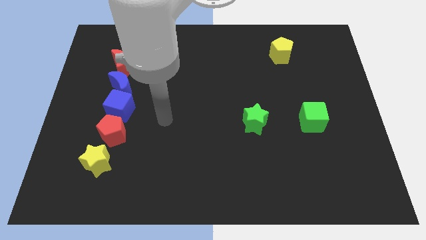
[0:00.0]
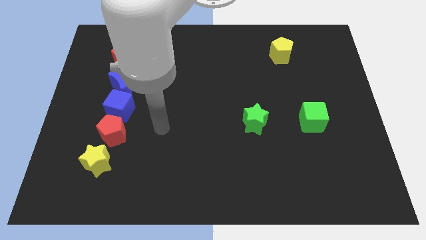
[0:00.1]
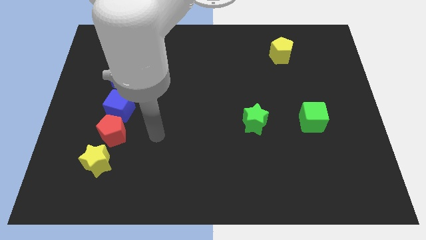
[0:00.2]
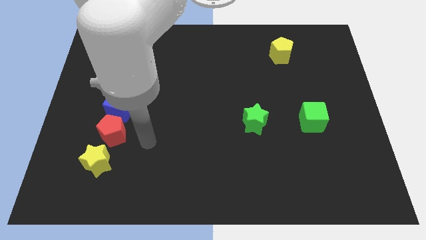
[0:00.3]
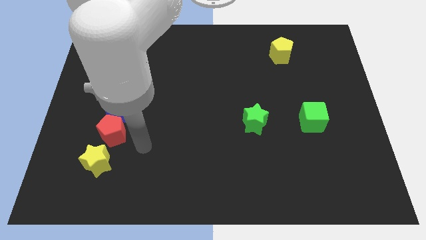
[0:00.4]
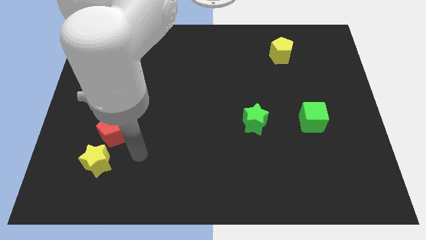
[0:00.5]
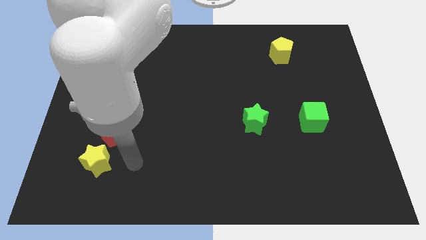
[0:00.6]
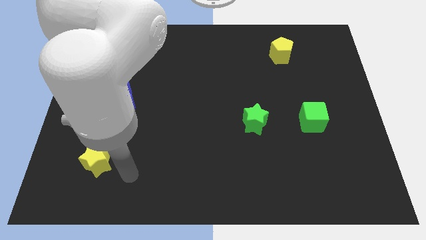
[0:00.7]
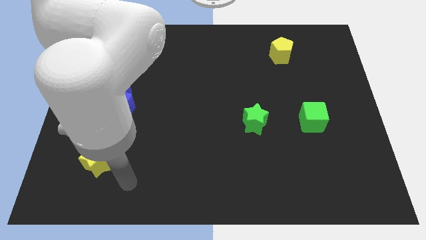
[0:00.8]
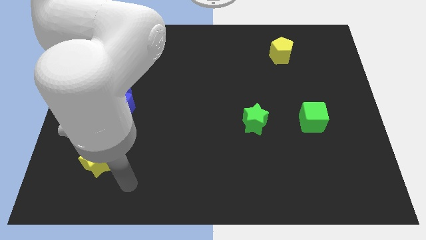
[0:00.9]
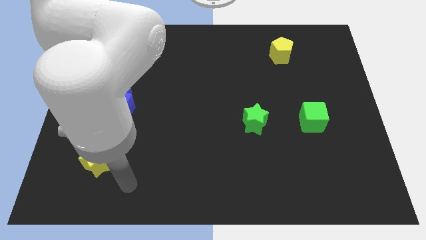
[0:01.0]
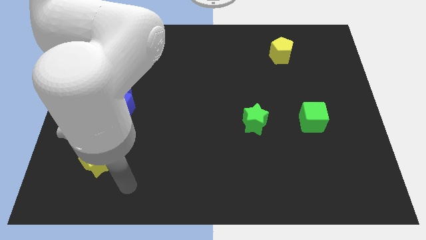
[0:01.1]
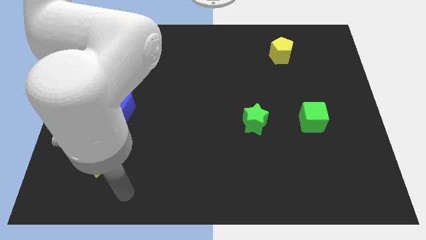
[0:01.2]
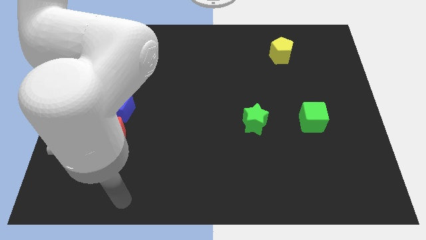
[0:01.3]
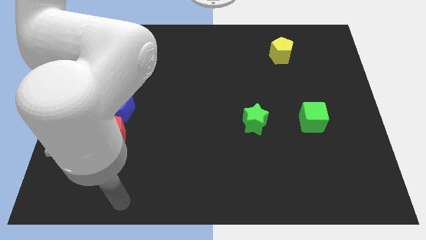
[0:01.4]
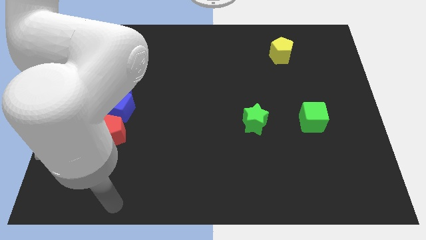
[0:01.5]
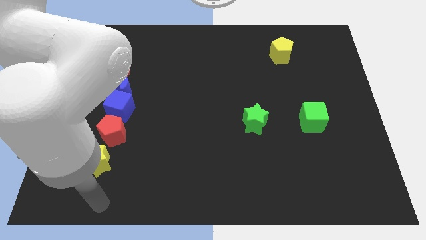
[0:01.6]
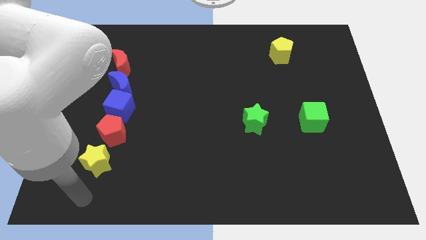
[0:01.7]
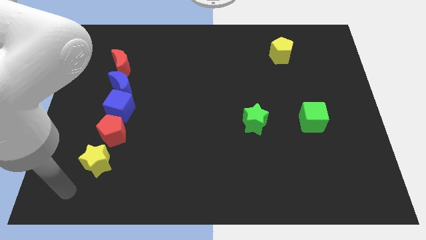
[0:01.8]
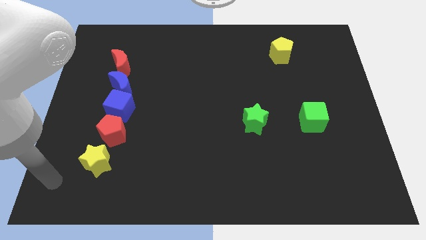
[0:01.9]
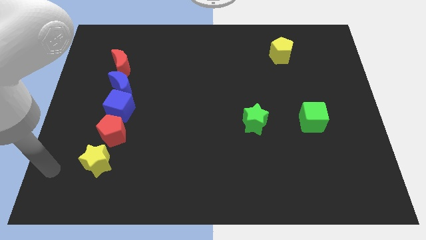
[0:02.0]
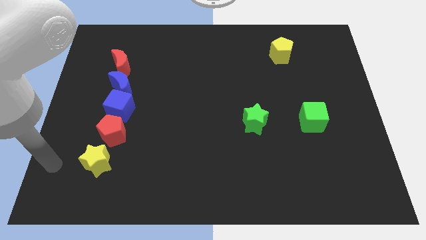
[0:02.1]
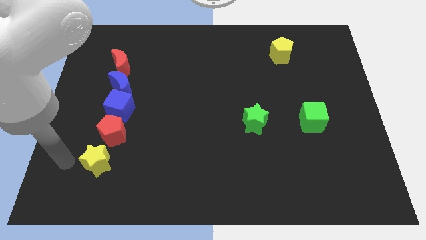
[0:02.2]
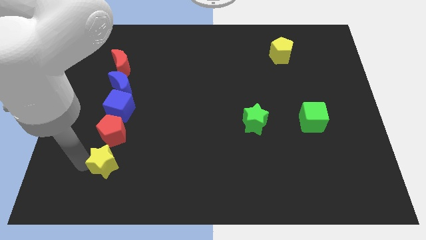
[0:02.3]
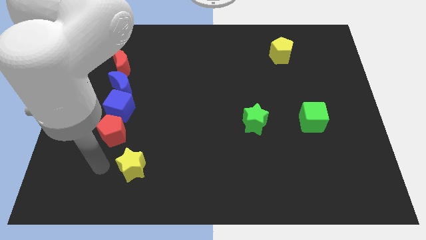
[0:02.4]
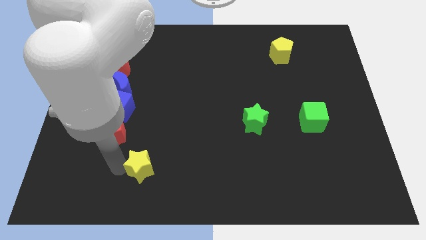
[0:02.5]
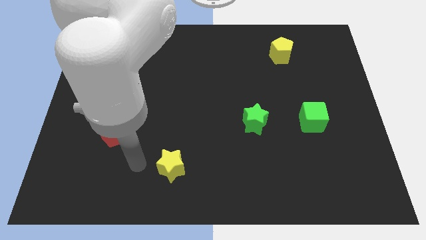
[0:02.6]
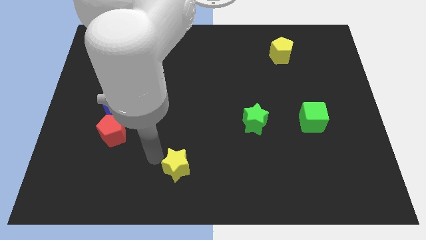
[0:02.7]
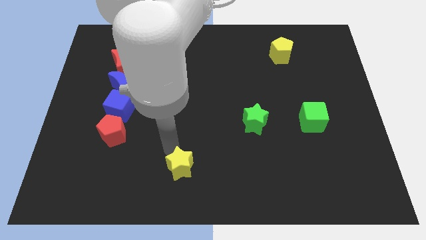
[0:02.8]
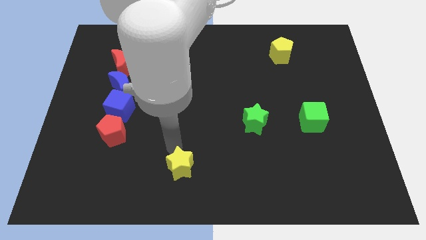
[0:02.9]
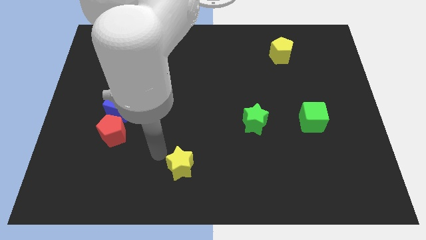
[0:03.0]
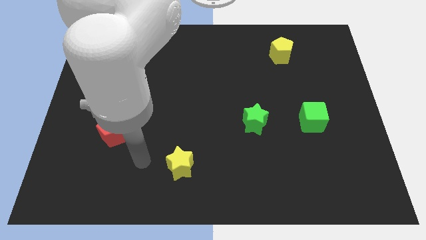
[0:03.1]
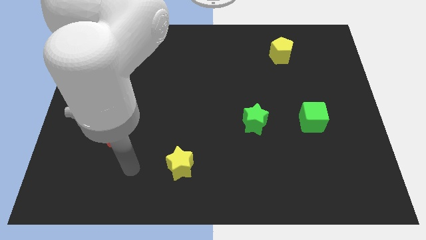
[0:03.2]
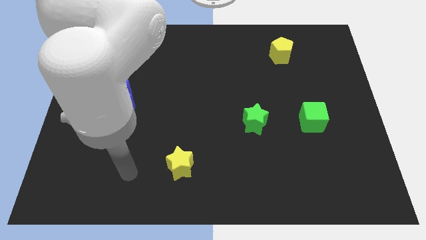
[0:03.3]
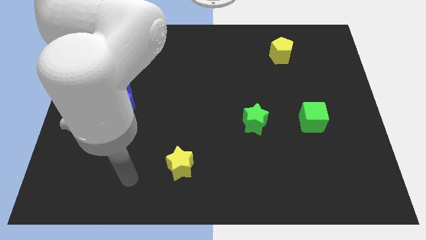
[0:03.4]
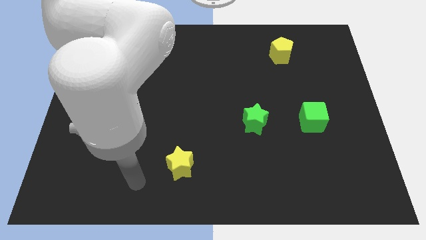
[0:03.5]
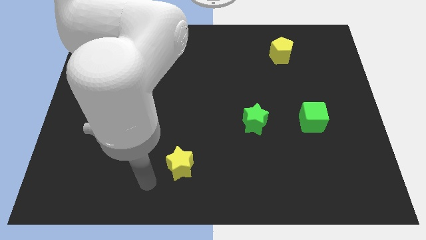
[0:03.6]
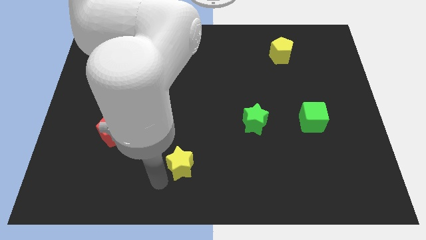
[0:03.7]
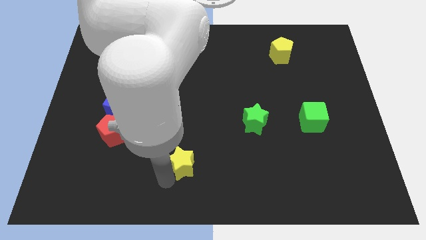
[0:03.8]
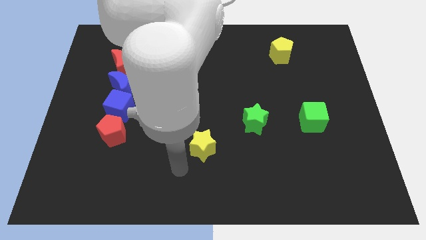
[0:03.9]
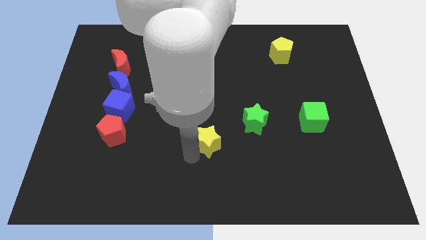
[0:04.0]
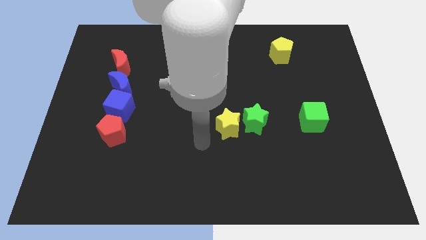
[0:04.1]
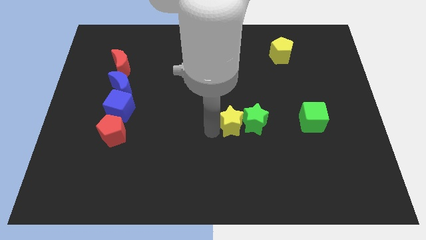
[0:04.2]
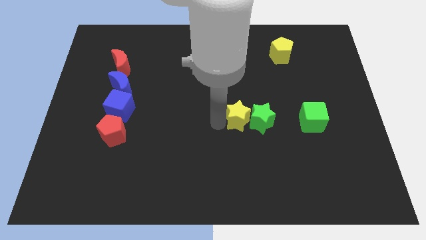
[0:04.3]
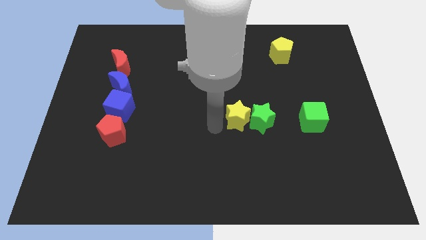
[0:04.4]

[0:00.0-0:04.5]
place the yellow star to the left of the green star

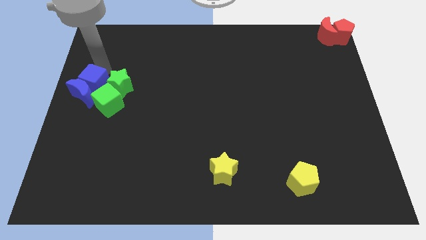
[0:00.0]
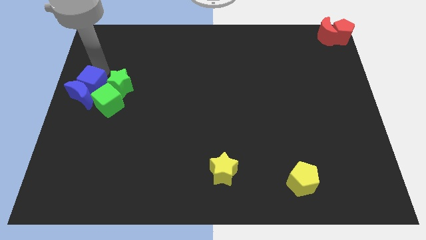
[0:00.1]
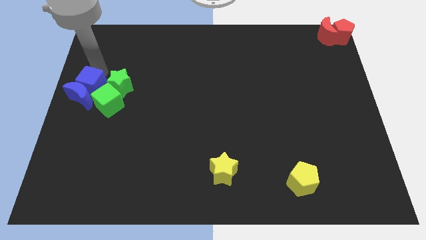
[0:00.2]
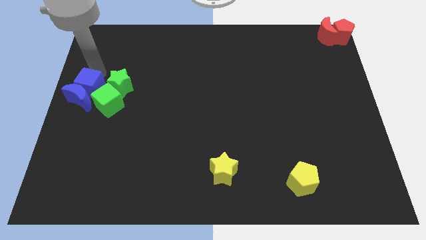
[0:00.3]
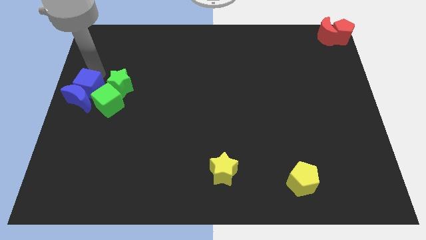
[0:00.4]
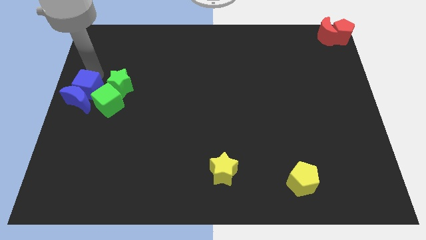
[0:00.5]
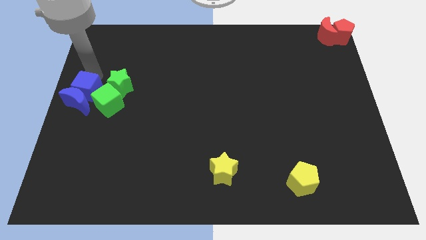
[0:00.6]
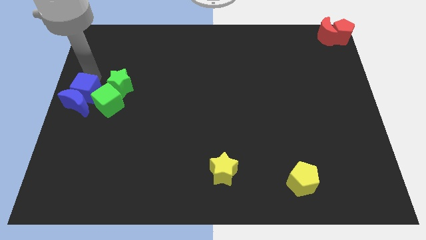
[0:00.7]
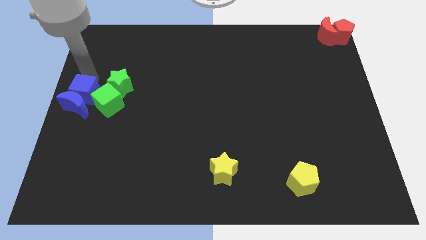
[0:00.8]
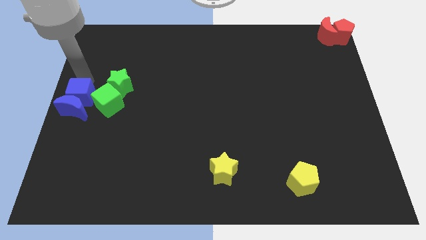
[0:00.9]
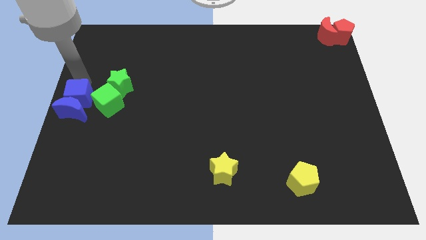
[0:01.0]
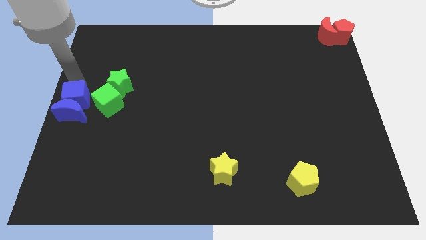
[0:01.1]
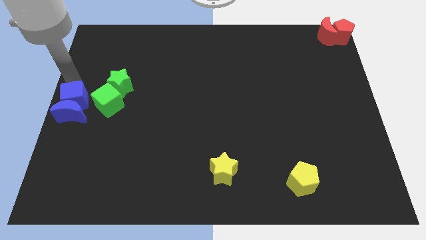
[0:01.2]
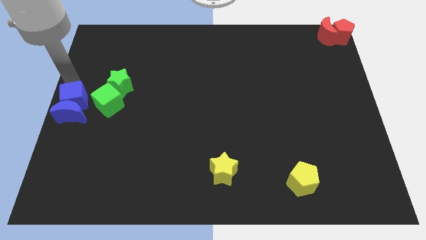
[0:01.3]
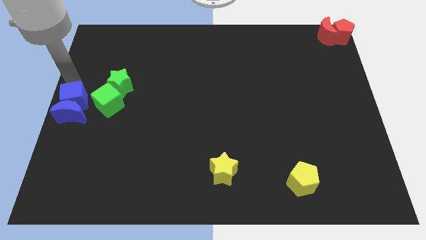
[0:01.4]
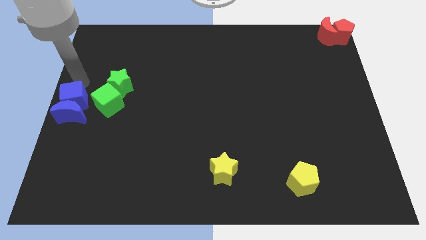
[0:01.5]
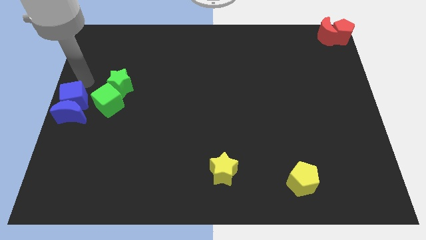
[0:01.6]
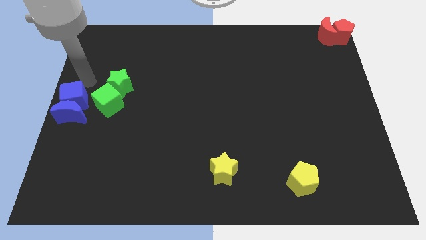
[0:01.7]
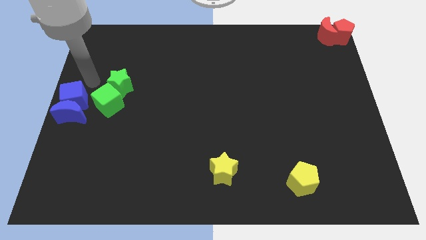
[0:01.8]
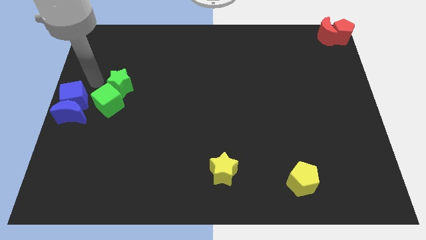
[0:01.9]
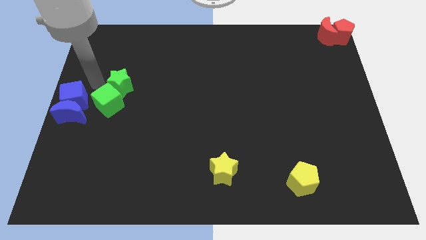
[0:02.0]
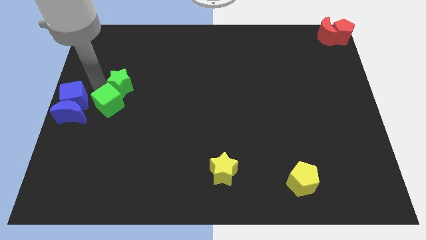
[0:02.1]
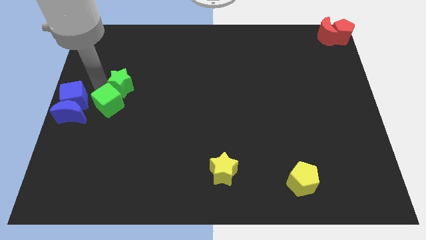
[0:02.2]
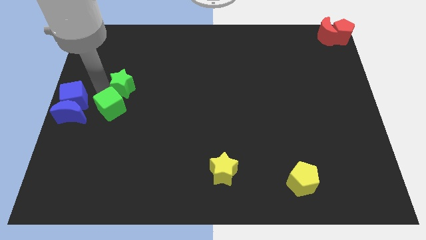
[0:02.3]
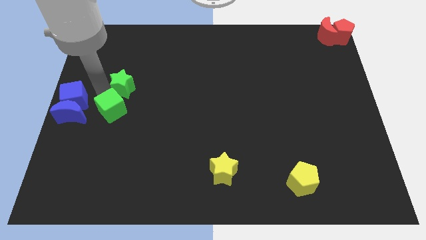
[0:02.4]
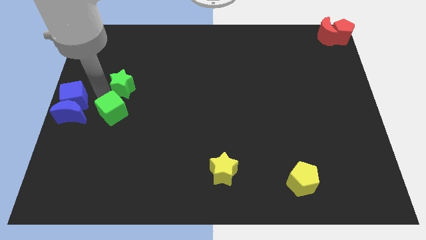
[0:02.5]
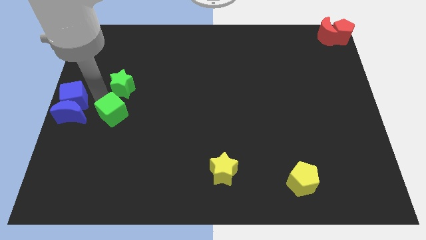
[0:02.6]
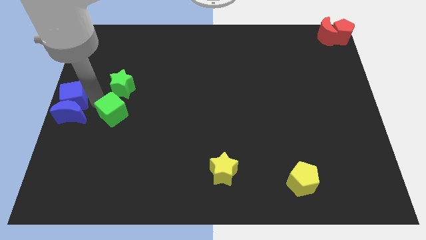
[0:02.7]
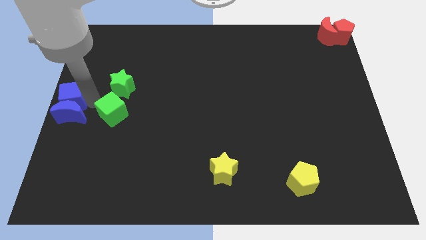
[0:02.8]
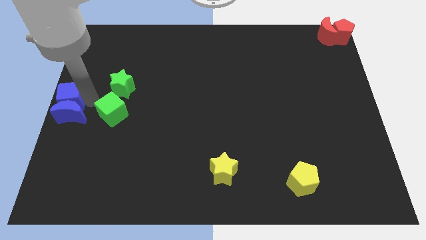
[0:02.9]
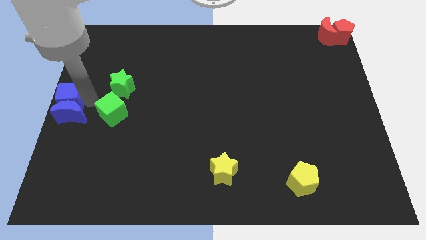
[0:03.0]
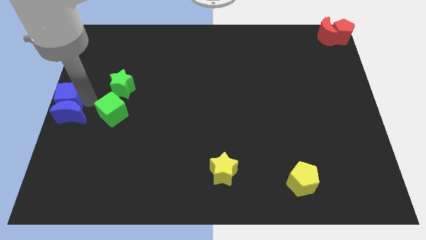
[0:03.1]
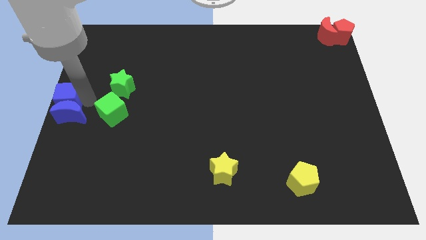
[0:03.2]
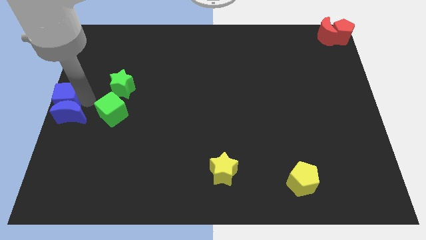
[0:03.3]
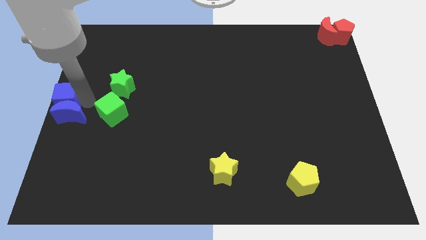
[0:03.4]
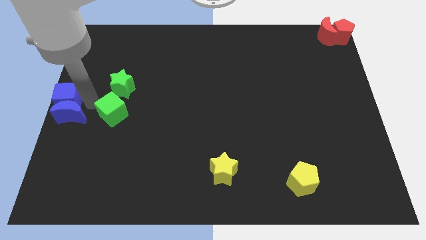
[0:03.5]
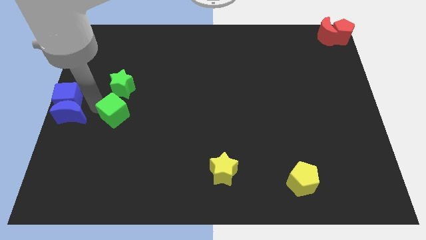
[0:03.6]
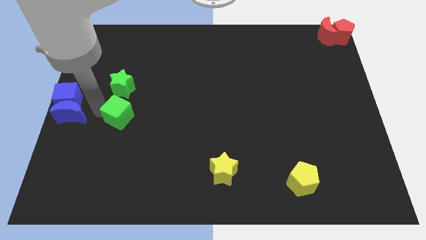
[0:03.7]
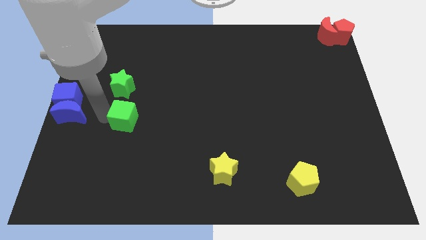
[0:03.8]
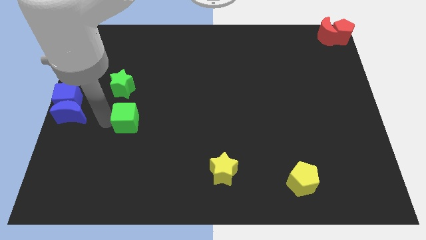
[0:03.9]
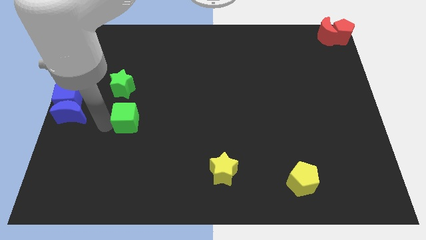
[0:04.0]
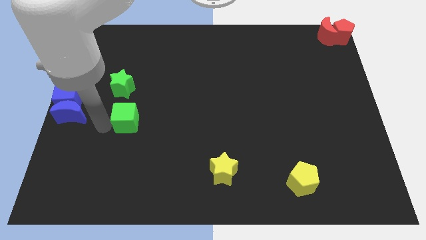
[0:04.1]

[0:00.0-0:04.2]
separate the blue blocks and green blocks

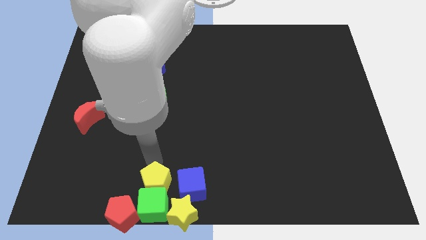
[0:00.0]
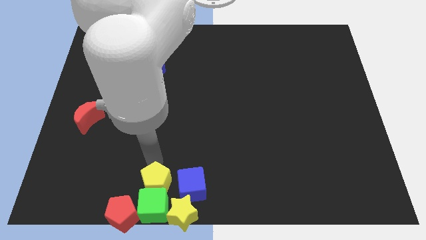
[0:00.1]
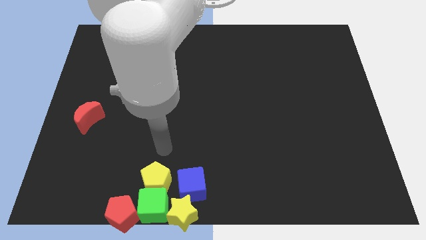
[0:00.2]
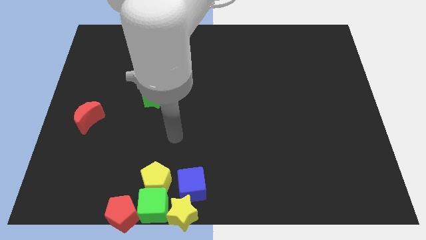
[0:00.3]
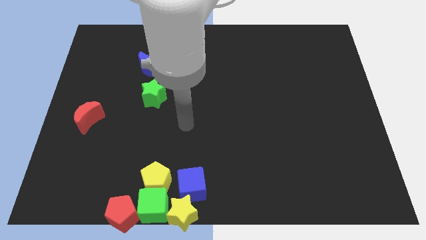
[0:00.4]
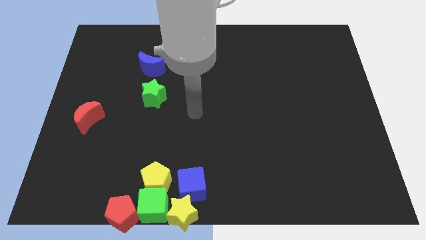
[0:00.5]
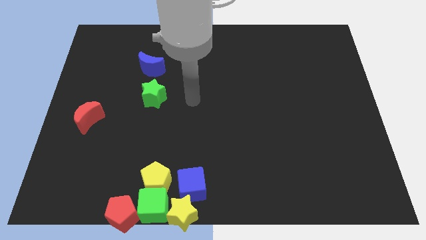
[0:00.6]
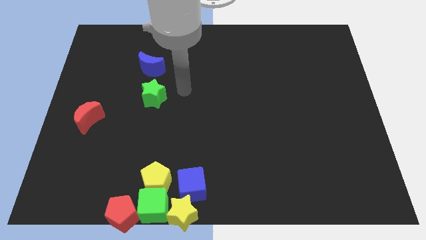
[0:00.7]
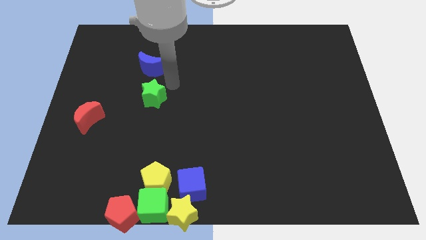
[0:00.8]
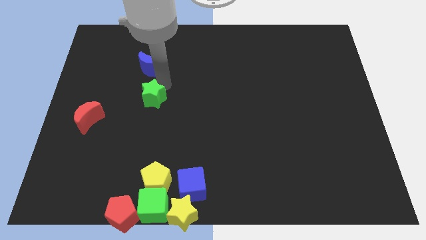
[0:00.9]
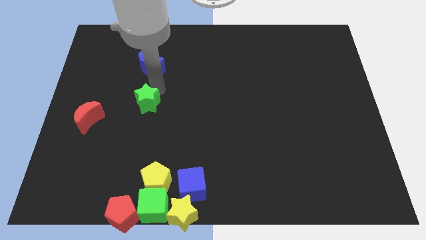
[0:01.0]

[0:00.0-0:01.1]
move your hand towards the green star
